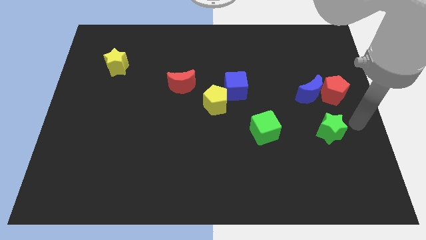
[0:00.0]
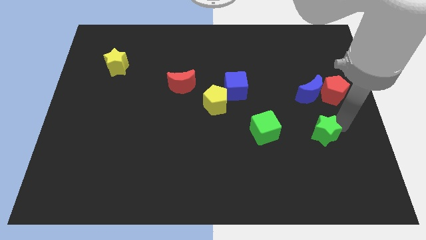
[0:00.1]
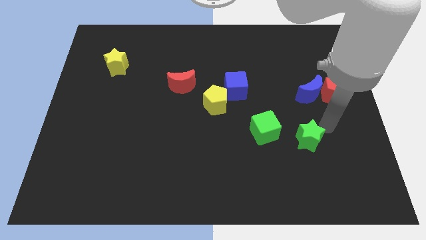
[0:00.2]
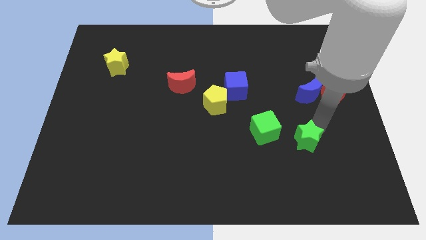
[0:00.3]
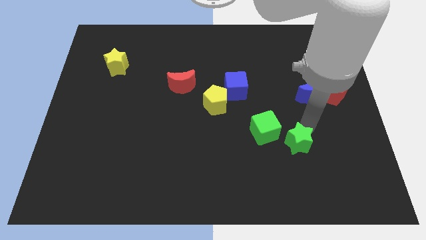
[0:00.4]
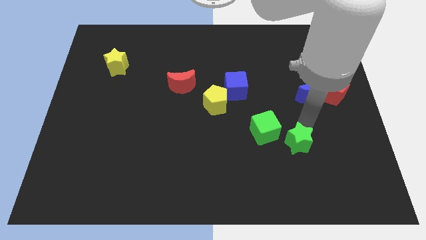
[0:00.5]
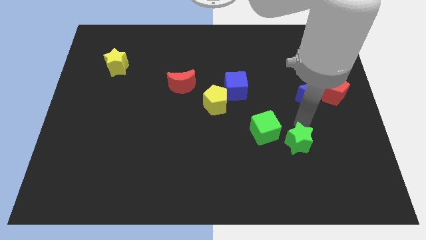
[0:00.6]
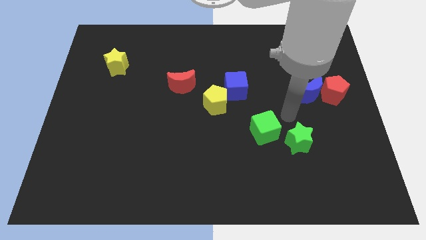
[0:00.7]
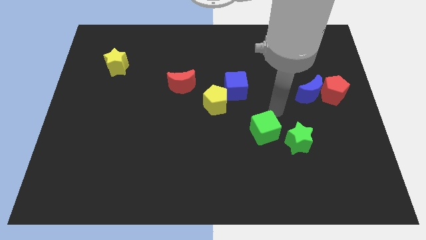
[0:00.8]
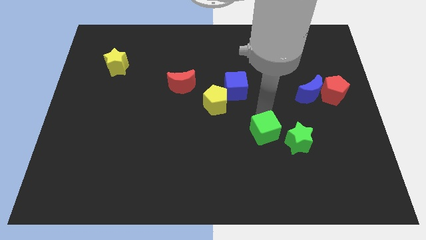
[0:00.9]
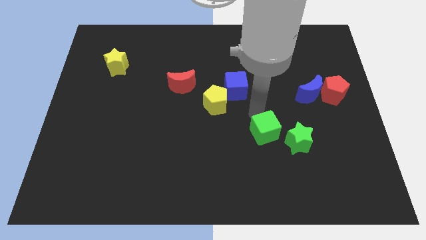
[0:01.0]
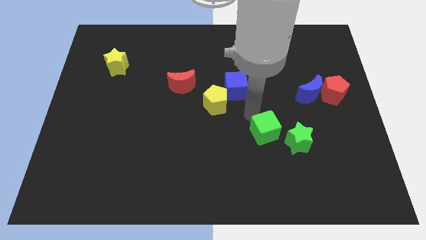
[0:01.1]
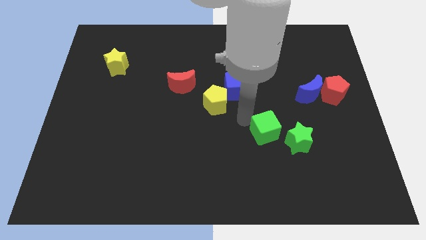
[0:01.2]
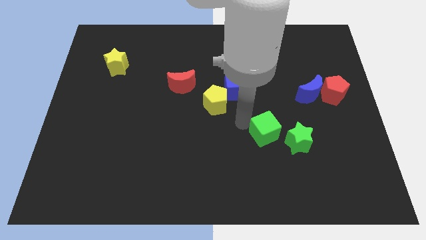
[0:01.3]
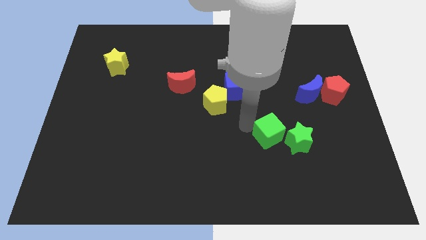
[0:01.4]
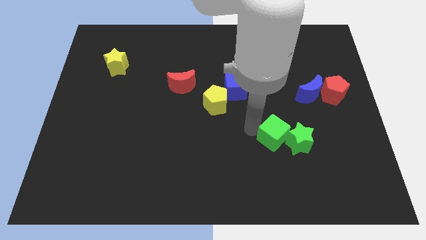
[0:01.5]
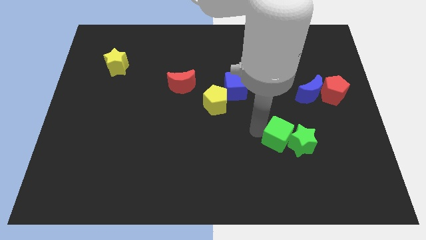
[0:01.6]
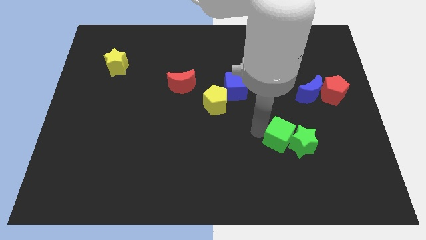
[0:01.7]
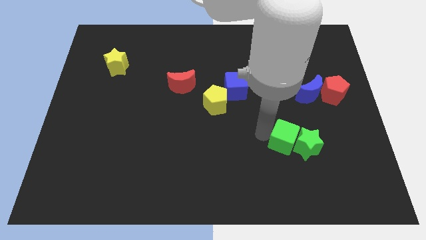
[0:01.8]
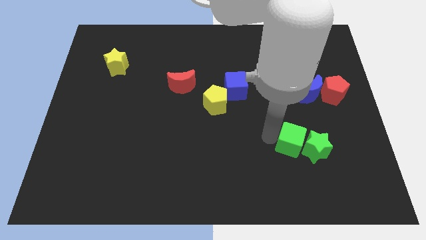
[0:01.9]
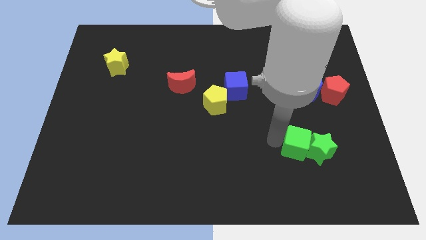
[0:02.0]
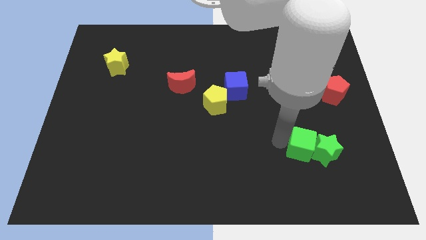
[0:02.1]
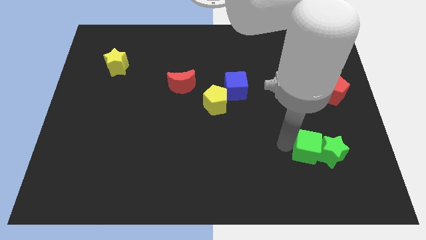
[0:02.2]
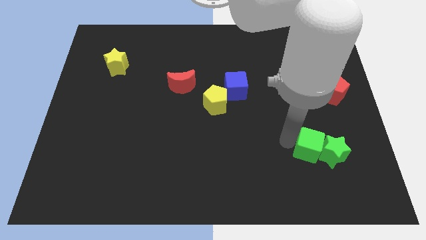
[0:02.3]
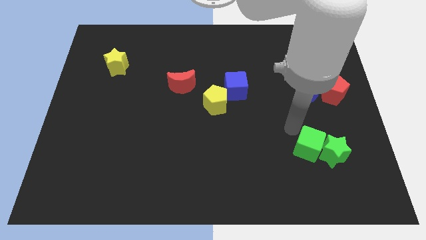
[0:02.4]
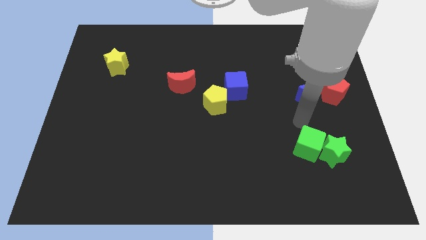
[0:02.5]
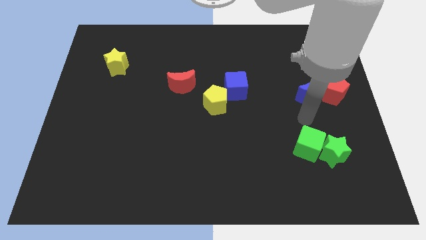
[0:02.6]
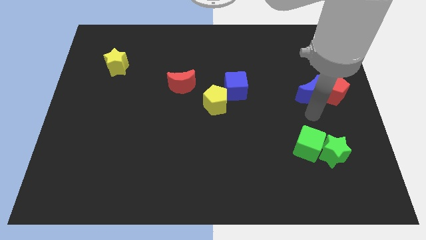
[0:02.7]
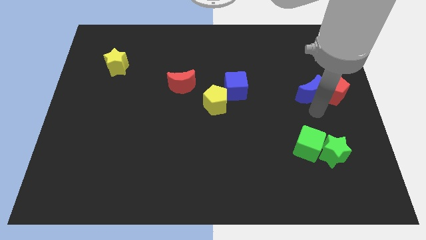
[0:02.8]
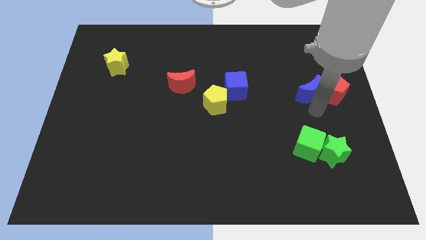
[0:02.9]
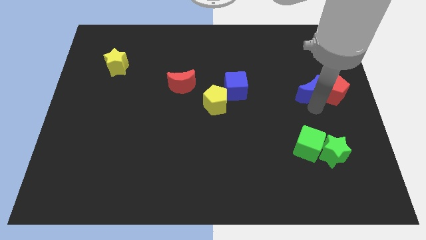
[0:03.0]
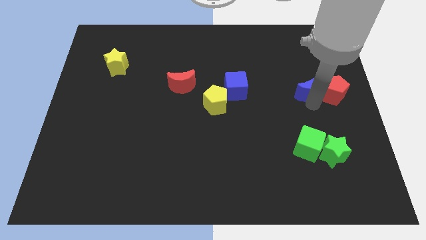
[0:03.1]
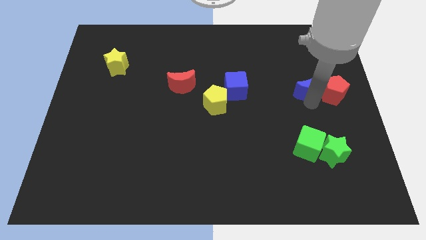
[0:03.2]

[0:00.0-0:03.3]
push the green blocks towards the bottom

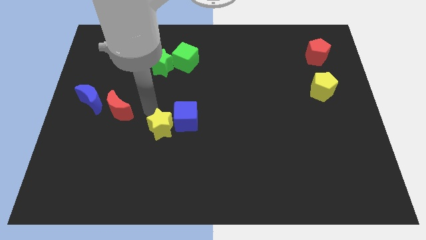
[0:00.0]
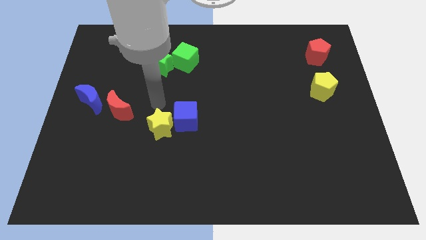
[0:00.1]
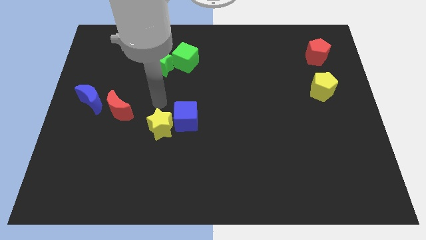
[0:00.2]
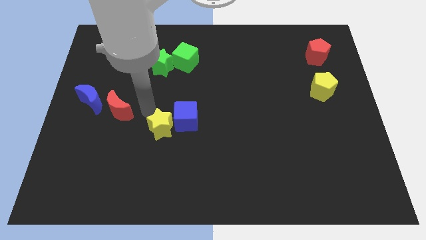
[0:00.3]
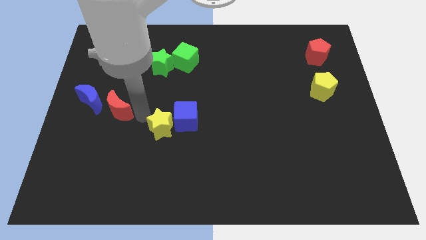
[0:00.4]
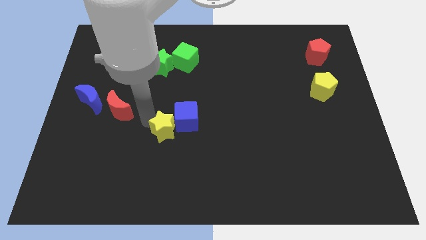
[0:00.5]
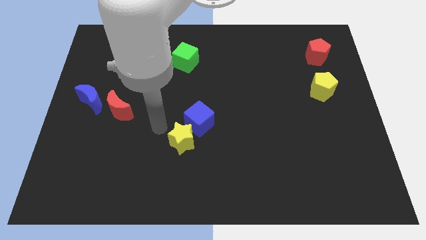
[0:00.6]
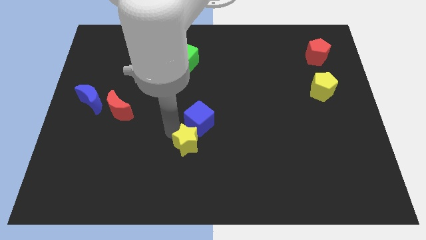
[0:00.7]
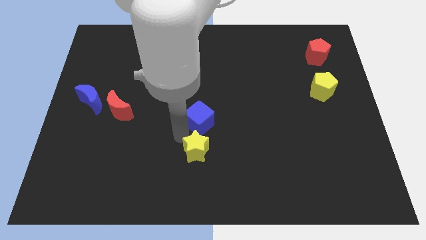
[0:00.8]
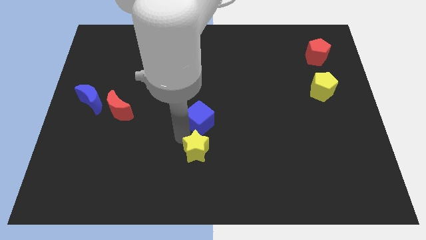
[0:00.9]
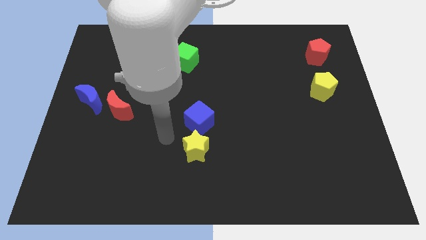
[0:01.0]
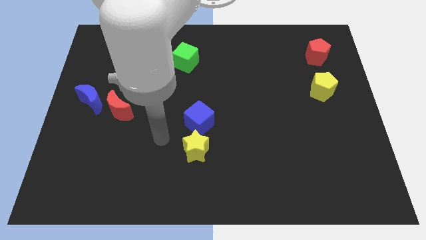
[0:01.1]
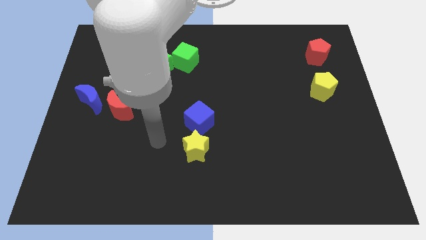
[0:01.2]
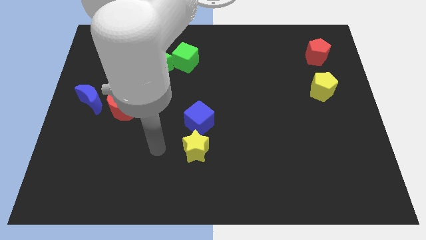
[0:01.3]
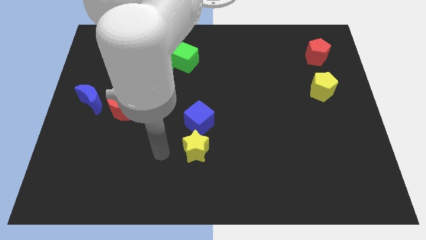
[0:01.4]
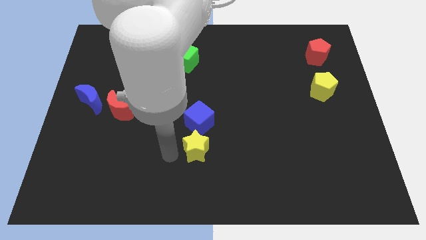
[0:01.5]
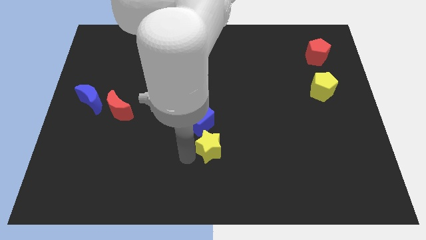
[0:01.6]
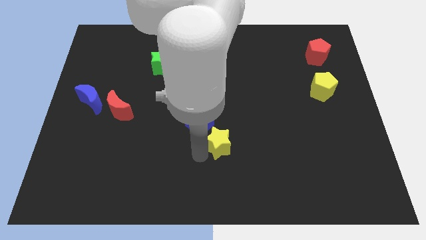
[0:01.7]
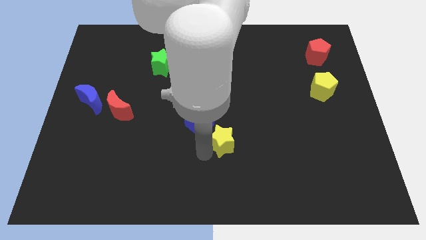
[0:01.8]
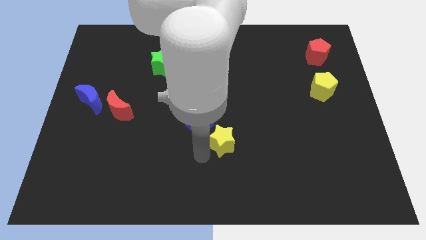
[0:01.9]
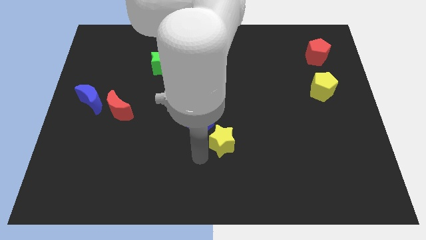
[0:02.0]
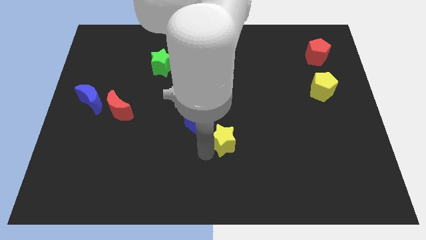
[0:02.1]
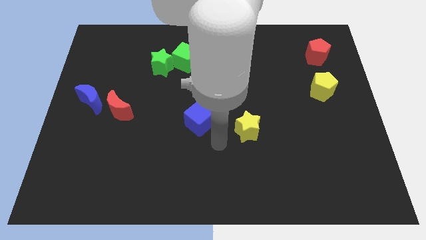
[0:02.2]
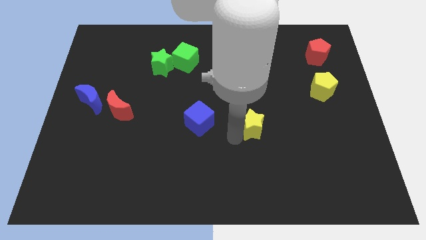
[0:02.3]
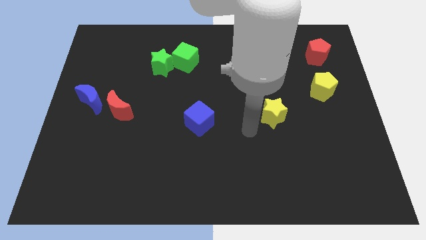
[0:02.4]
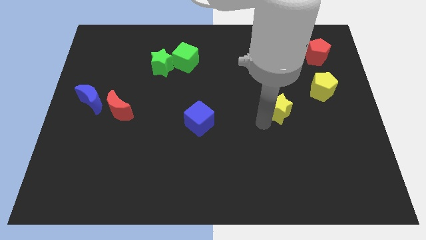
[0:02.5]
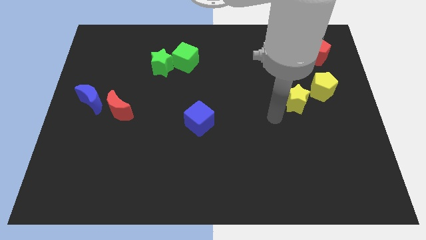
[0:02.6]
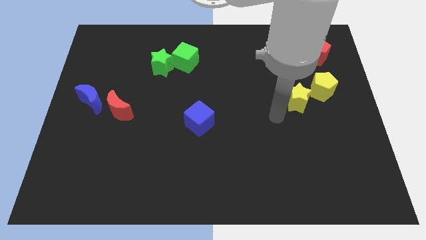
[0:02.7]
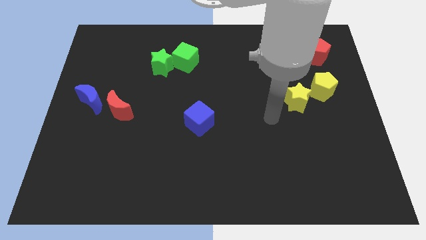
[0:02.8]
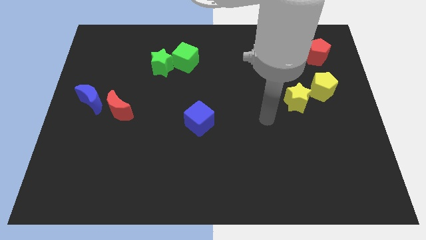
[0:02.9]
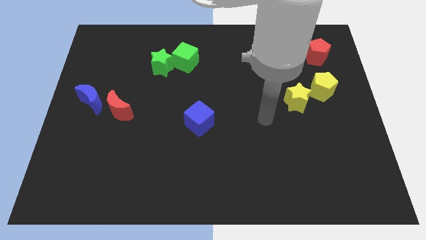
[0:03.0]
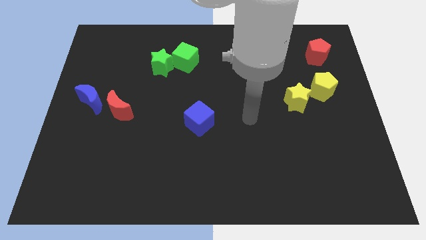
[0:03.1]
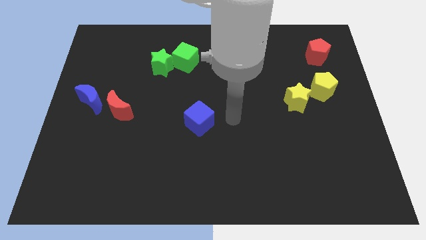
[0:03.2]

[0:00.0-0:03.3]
place yellow star to the bottom left of yellow pentagon

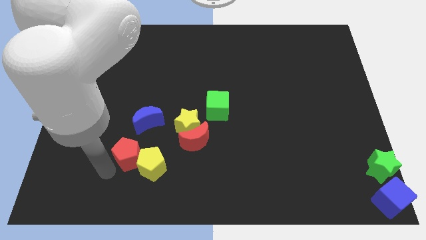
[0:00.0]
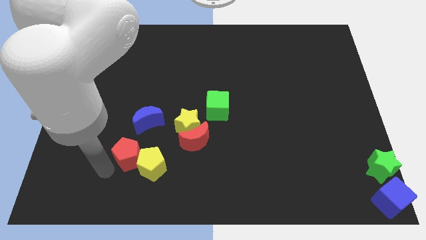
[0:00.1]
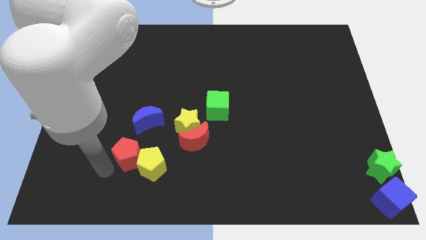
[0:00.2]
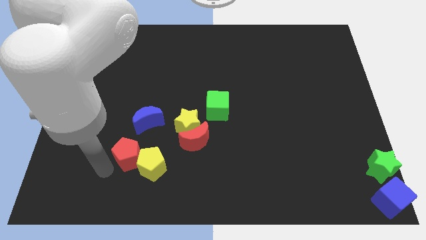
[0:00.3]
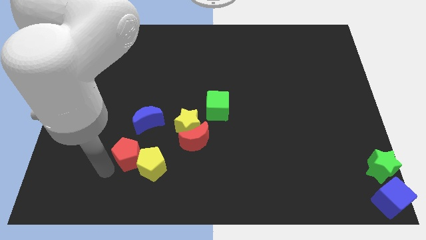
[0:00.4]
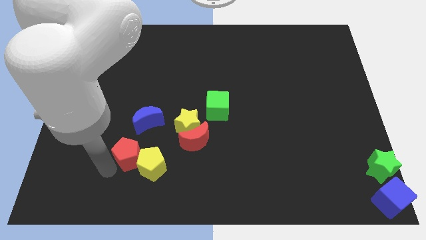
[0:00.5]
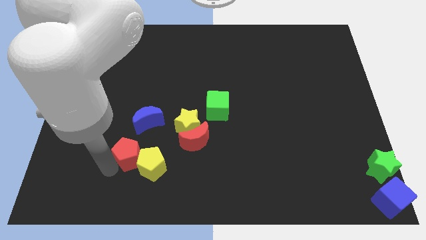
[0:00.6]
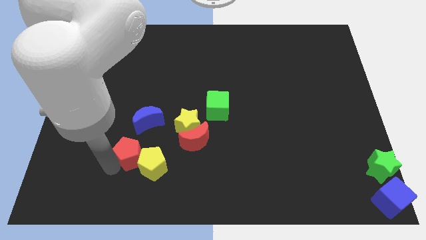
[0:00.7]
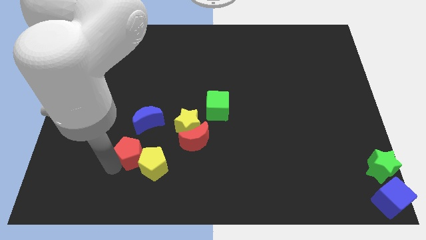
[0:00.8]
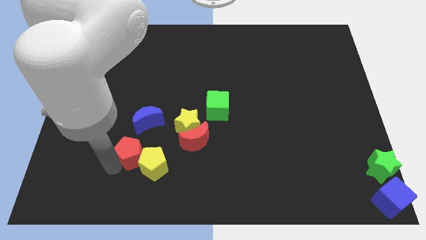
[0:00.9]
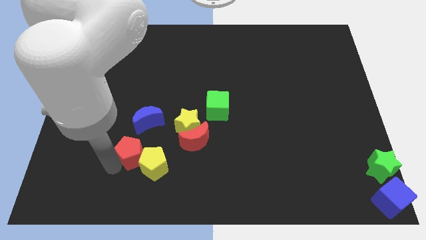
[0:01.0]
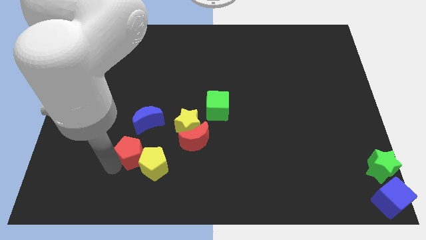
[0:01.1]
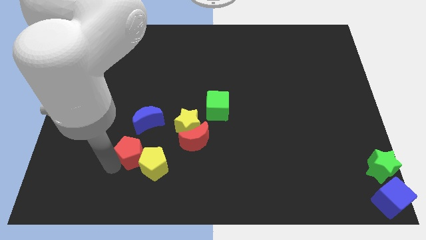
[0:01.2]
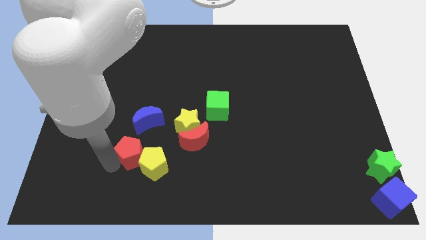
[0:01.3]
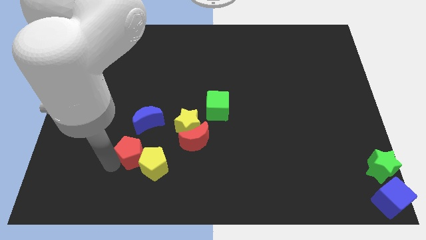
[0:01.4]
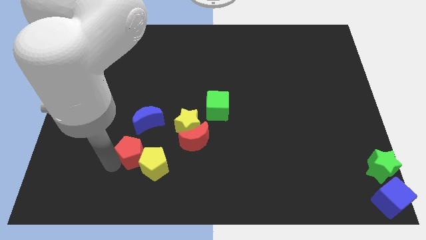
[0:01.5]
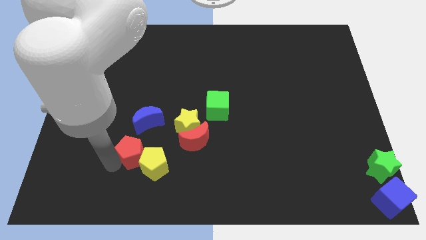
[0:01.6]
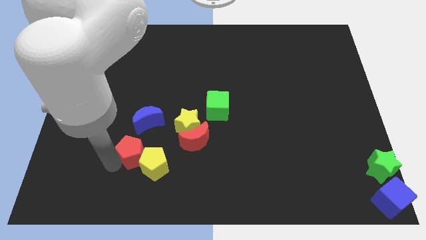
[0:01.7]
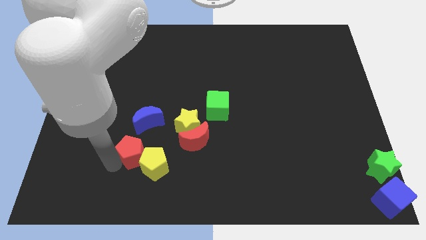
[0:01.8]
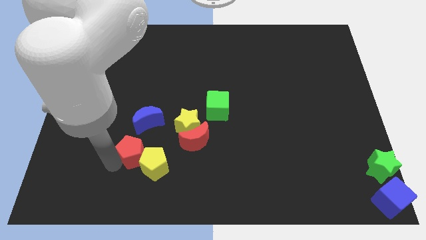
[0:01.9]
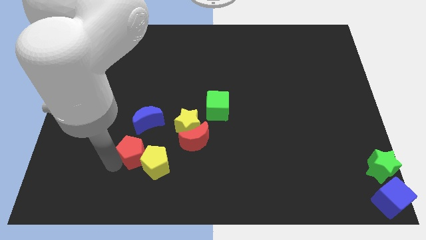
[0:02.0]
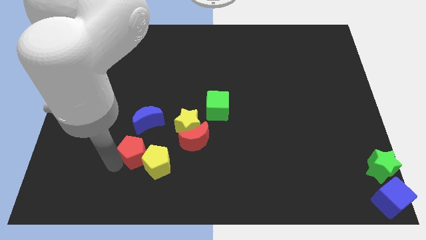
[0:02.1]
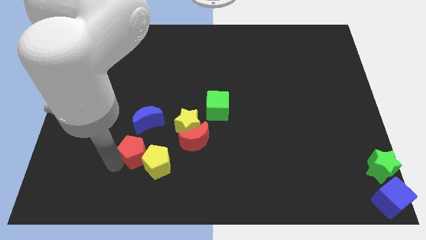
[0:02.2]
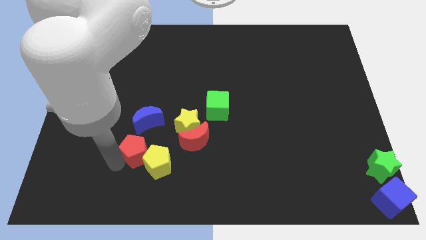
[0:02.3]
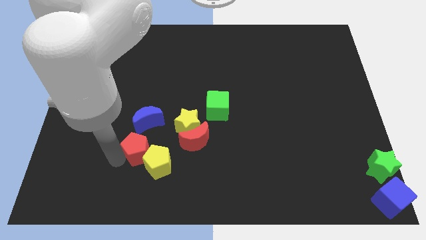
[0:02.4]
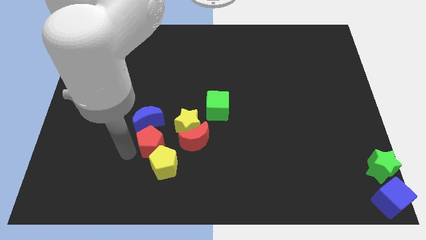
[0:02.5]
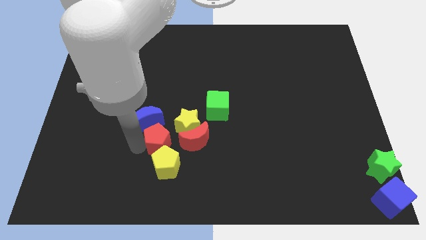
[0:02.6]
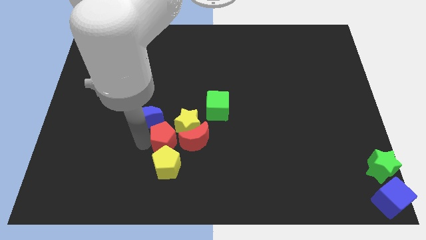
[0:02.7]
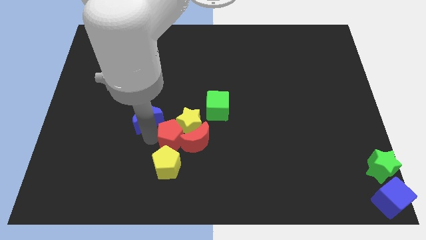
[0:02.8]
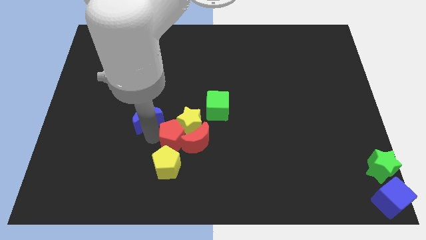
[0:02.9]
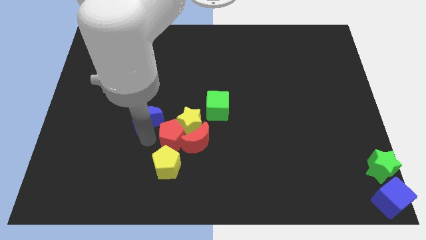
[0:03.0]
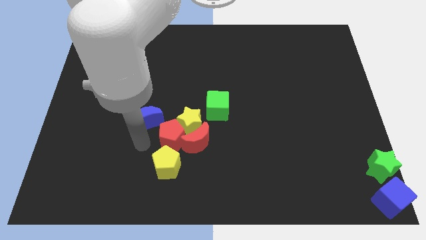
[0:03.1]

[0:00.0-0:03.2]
put the red pentagon in between the yellow star and yellow pentagon
